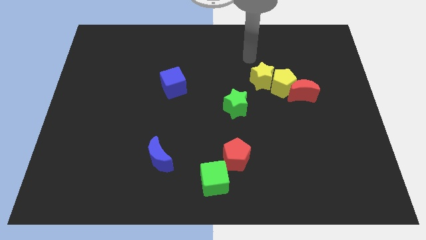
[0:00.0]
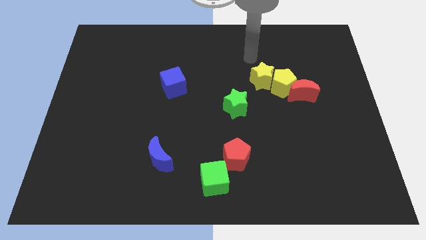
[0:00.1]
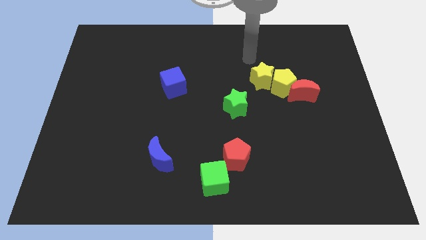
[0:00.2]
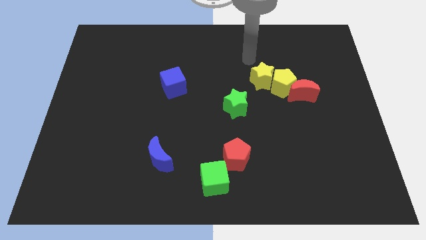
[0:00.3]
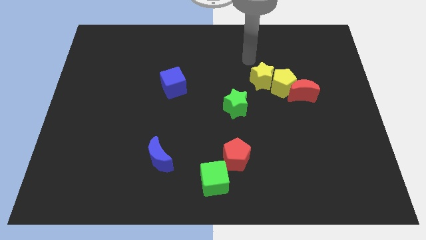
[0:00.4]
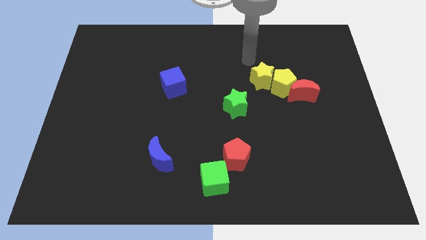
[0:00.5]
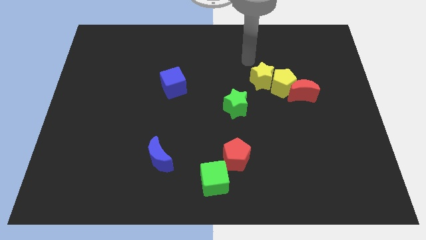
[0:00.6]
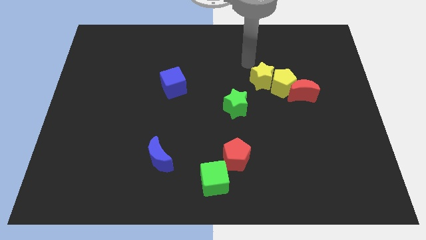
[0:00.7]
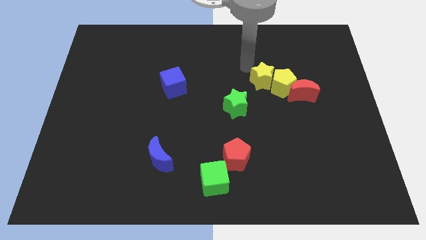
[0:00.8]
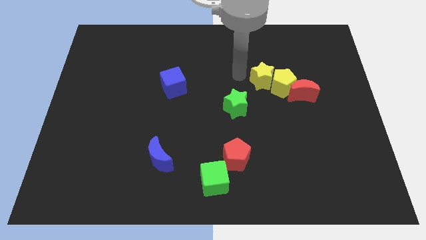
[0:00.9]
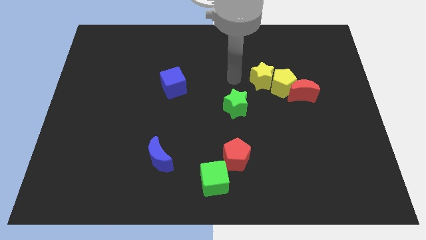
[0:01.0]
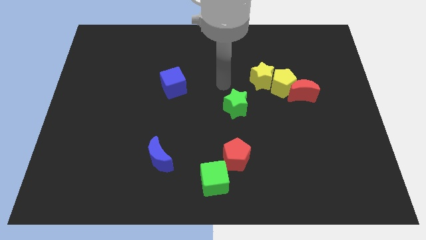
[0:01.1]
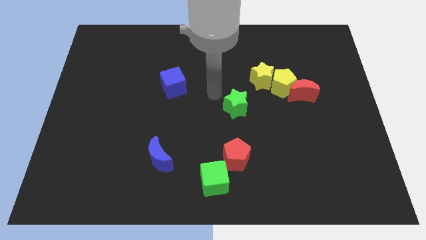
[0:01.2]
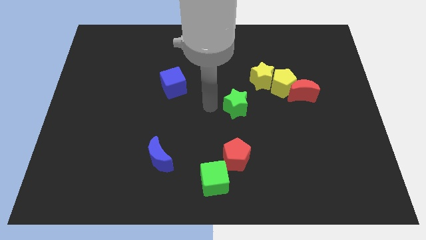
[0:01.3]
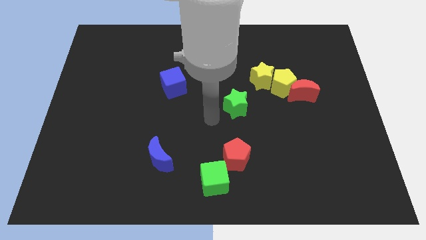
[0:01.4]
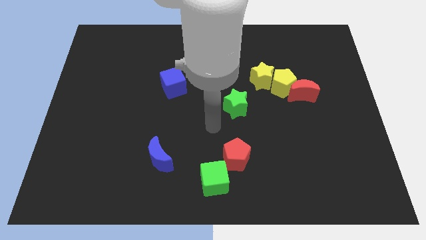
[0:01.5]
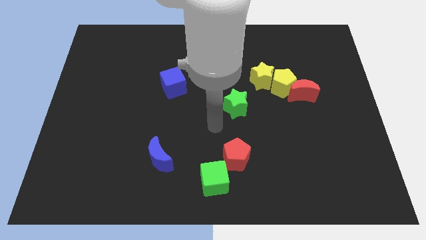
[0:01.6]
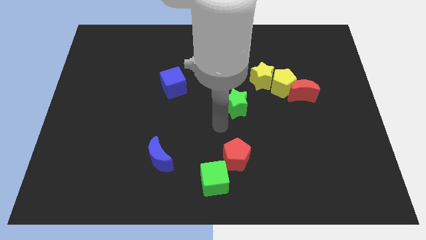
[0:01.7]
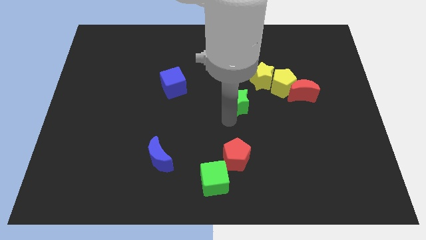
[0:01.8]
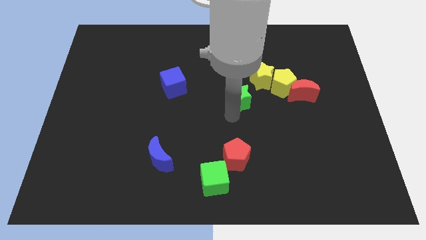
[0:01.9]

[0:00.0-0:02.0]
push the green star to the top of the board

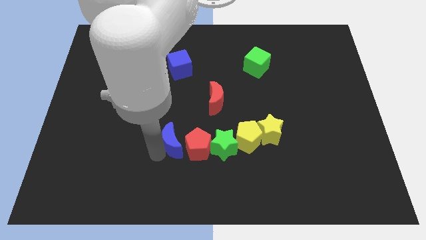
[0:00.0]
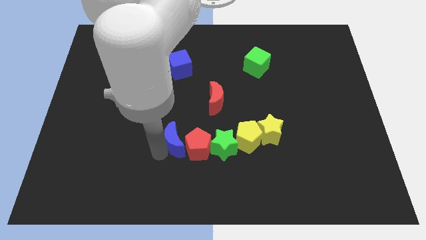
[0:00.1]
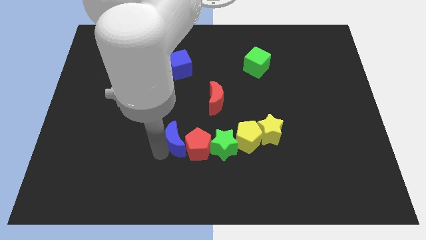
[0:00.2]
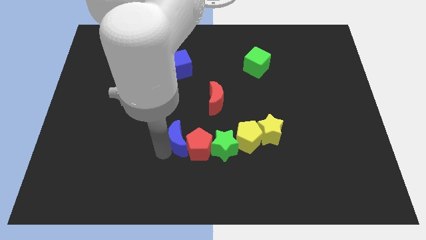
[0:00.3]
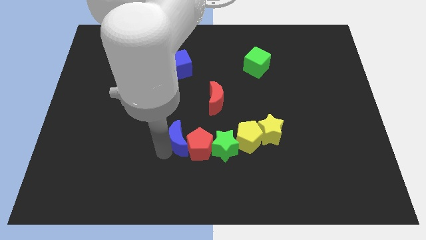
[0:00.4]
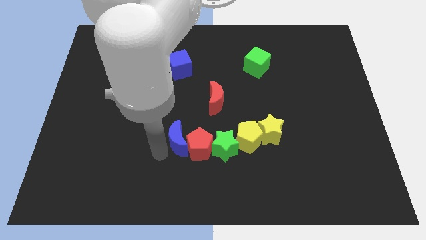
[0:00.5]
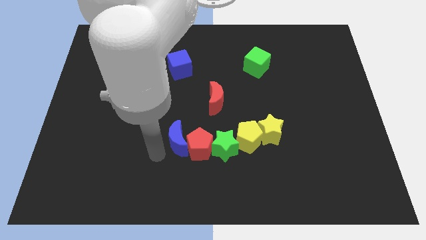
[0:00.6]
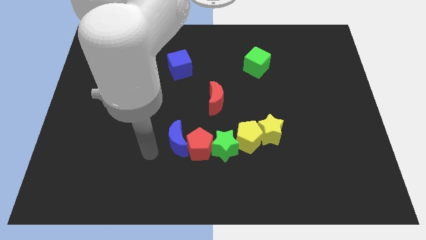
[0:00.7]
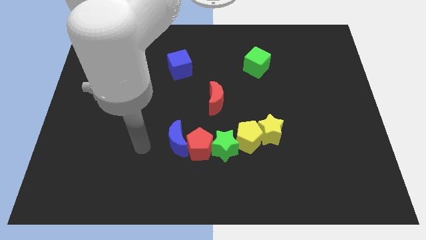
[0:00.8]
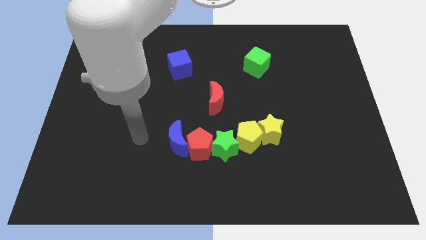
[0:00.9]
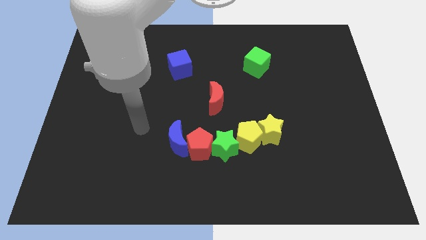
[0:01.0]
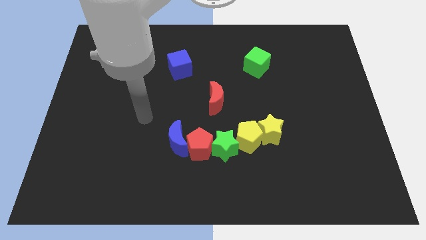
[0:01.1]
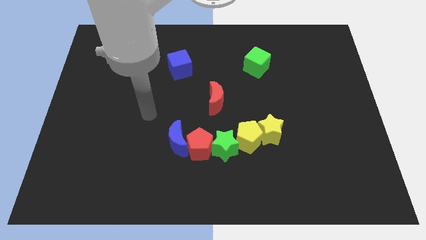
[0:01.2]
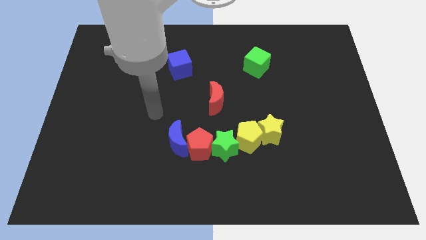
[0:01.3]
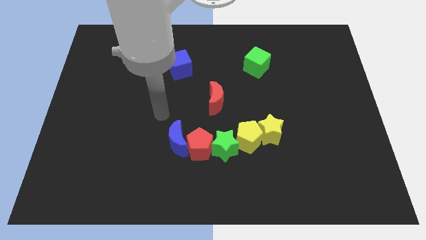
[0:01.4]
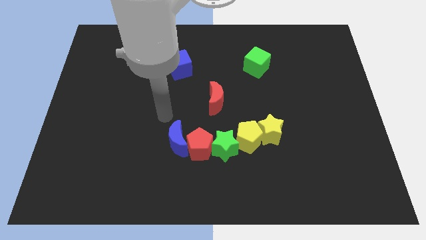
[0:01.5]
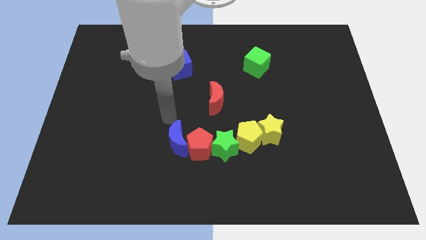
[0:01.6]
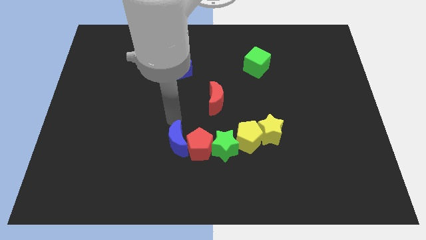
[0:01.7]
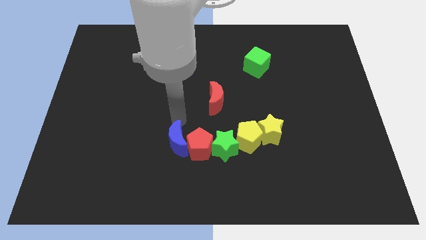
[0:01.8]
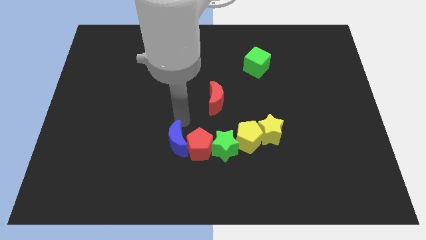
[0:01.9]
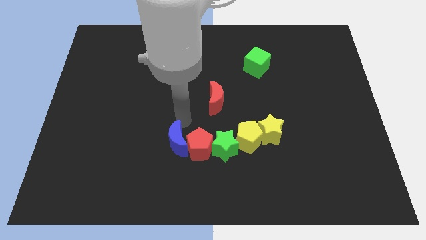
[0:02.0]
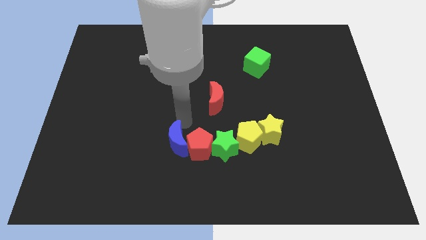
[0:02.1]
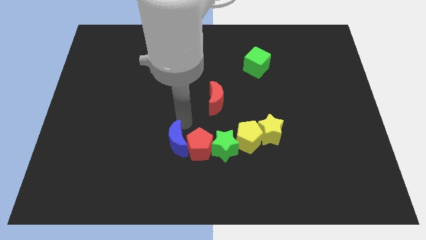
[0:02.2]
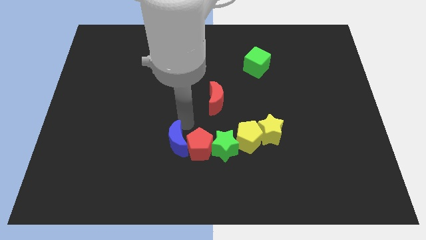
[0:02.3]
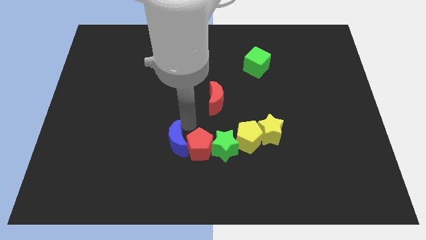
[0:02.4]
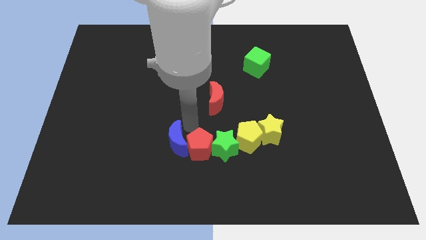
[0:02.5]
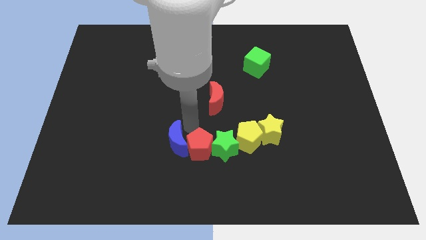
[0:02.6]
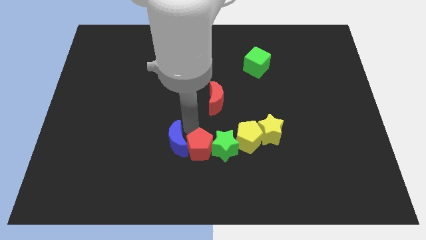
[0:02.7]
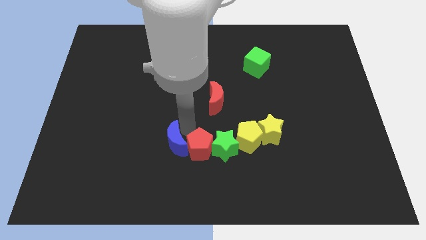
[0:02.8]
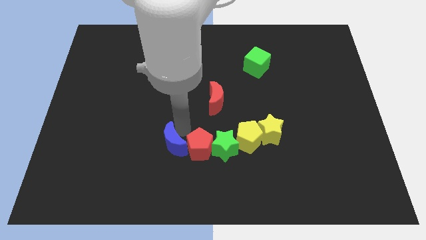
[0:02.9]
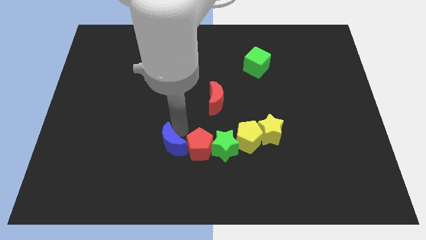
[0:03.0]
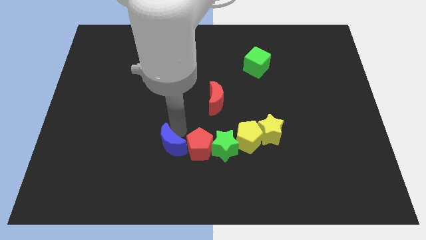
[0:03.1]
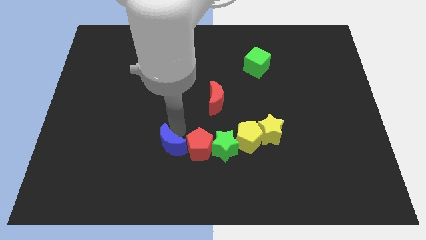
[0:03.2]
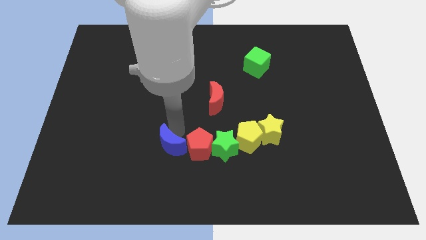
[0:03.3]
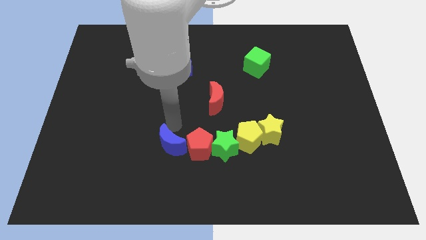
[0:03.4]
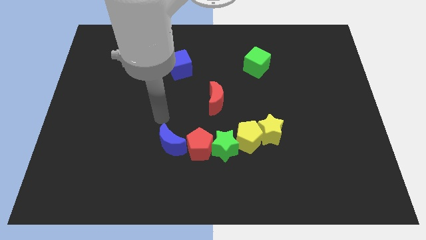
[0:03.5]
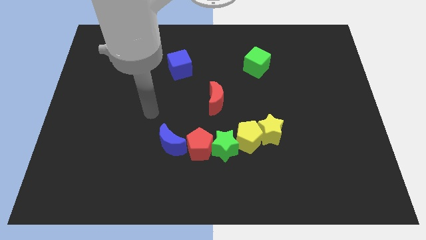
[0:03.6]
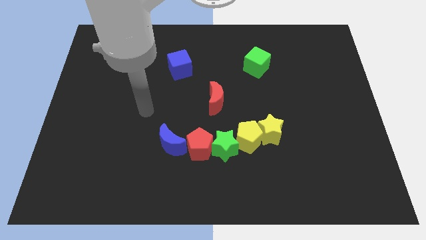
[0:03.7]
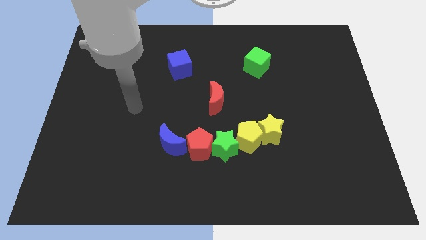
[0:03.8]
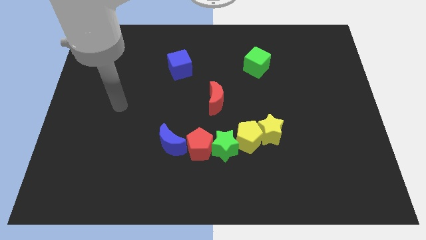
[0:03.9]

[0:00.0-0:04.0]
move your arm away from the blue moon

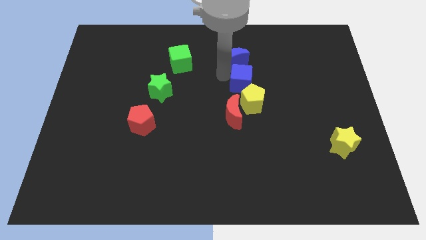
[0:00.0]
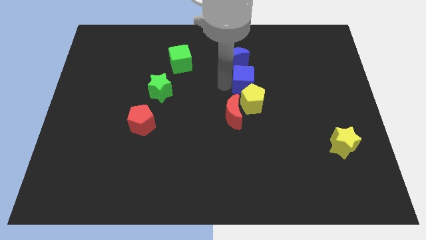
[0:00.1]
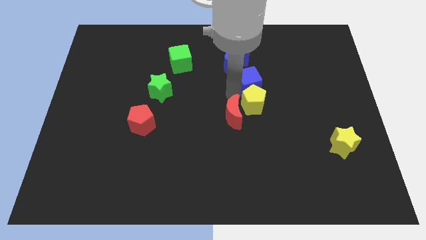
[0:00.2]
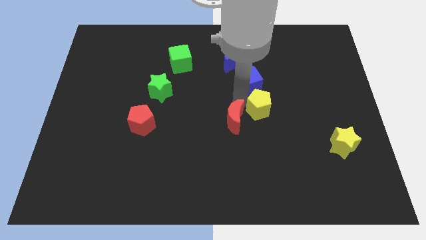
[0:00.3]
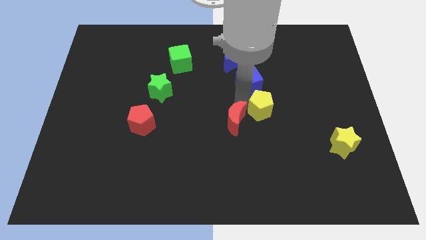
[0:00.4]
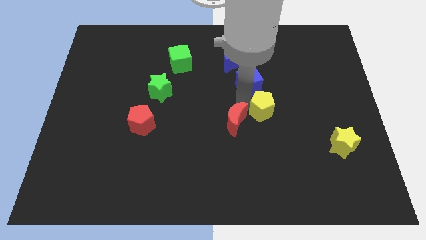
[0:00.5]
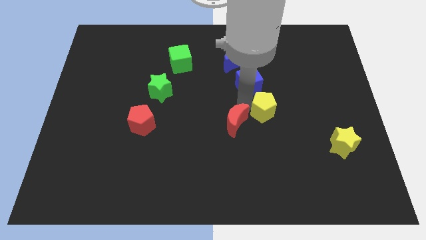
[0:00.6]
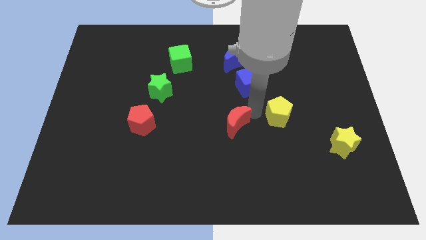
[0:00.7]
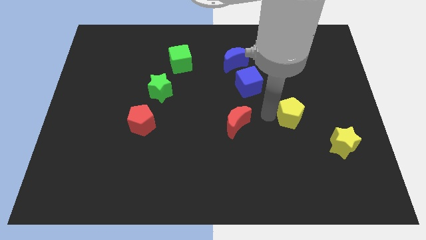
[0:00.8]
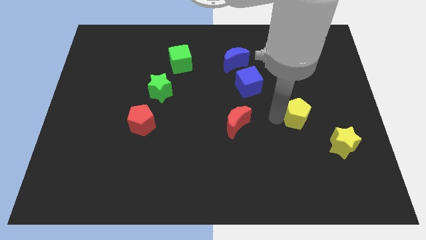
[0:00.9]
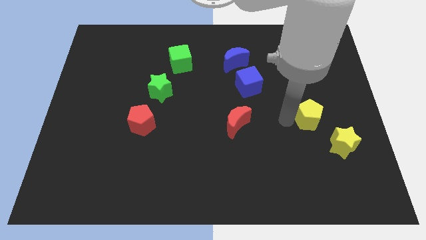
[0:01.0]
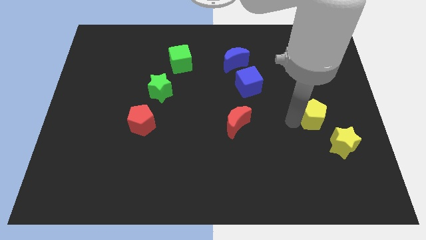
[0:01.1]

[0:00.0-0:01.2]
separate the yellow pentagon from the red pentagon

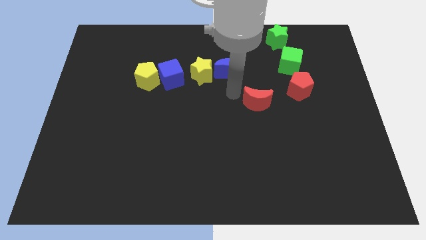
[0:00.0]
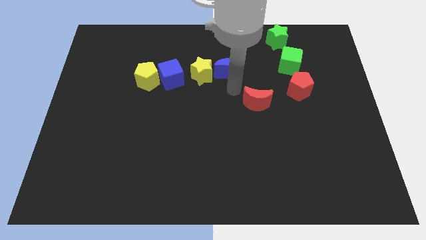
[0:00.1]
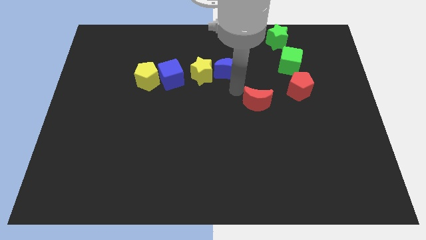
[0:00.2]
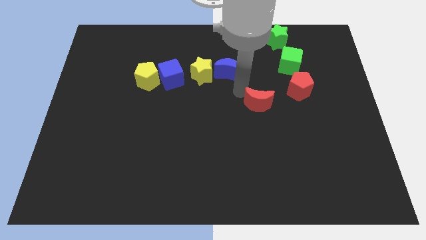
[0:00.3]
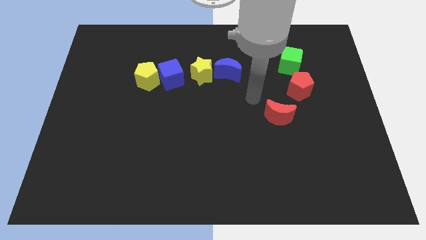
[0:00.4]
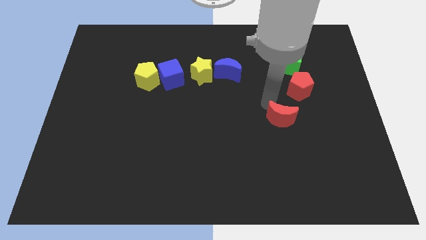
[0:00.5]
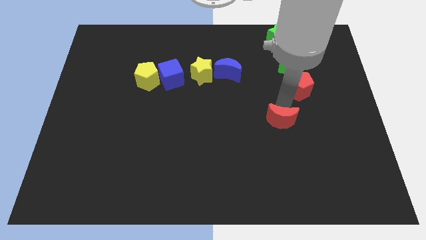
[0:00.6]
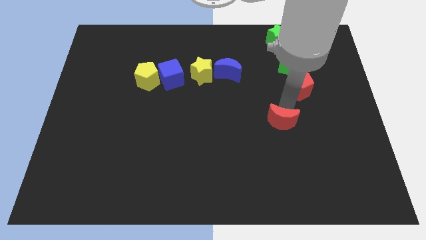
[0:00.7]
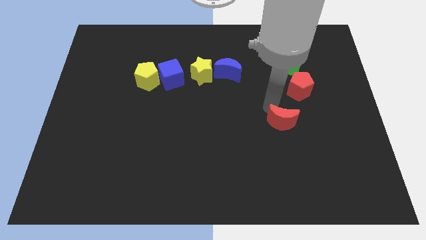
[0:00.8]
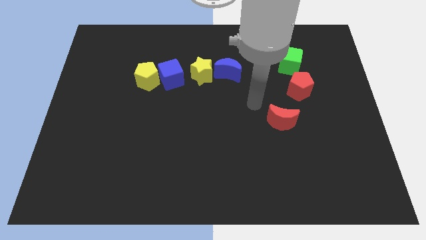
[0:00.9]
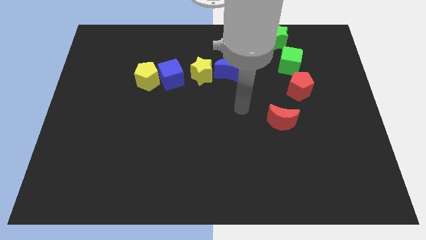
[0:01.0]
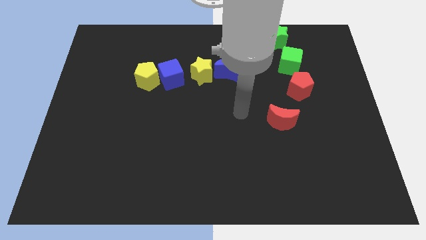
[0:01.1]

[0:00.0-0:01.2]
push the red crescent to the right of the board

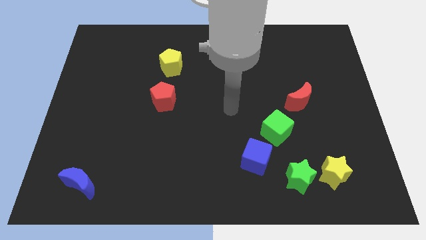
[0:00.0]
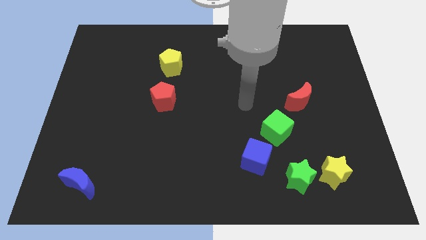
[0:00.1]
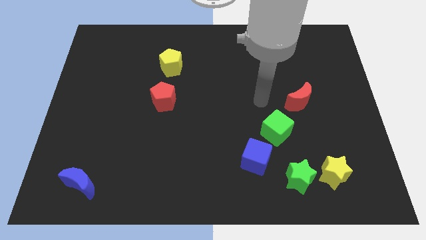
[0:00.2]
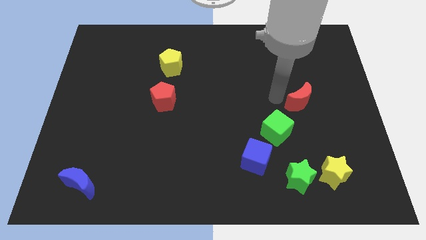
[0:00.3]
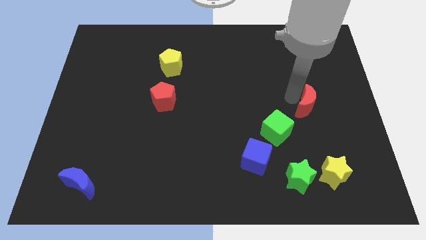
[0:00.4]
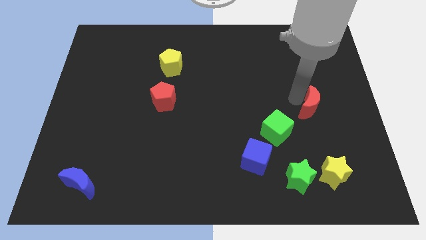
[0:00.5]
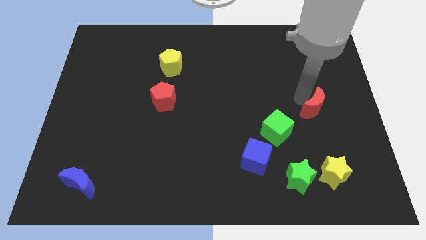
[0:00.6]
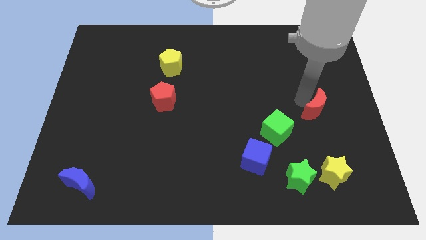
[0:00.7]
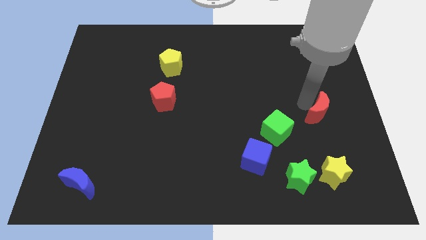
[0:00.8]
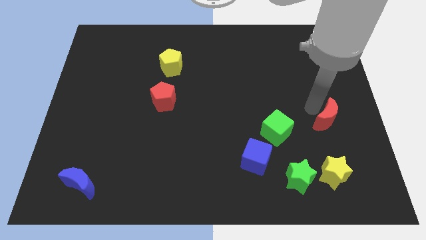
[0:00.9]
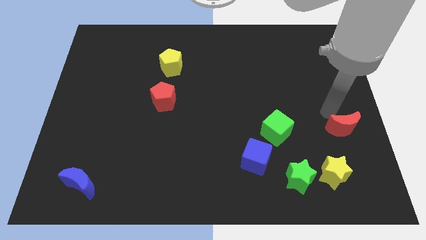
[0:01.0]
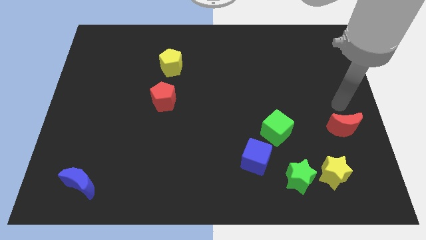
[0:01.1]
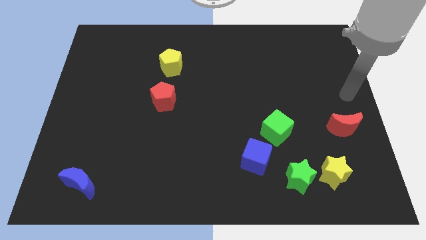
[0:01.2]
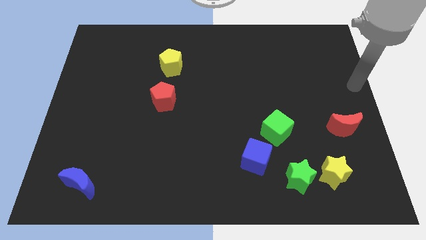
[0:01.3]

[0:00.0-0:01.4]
move red moon right to green cube
